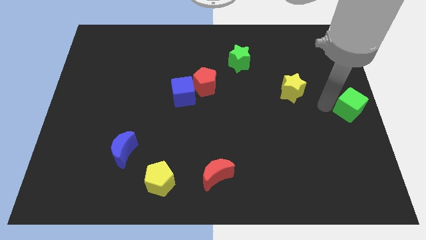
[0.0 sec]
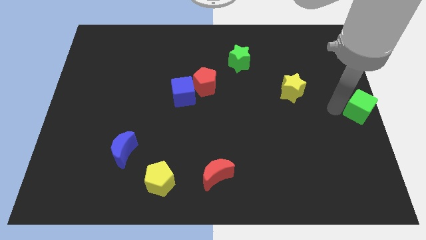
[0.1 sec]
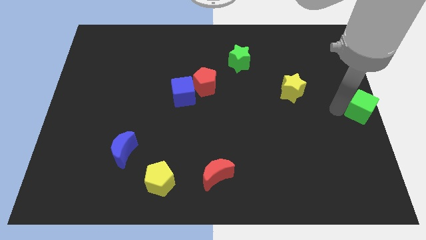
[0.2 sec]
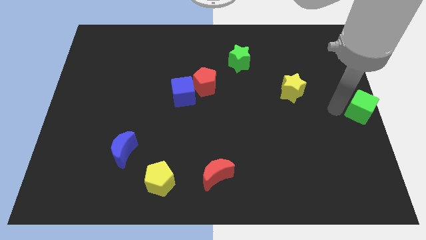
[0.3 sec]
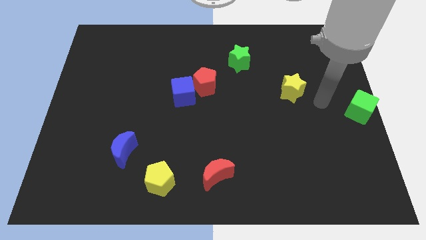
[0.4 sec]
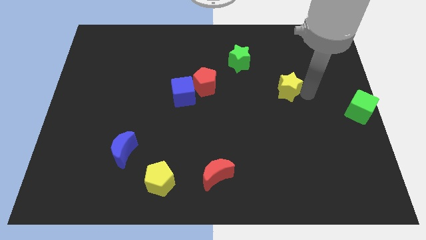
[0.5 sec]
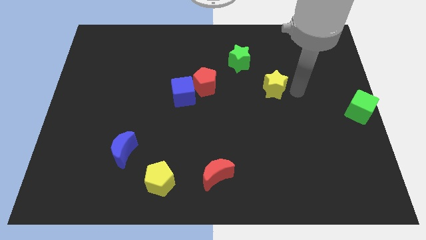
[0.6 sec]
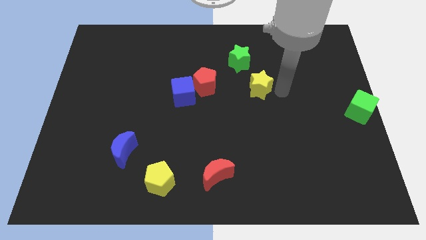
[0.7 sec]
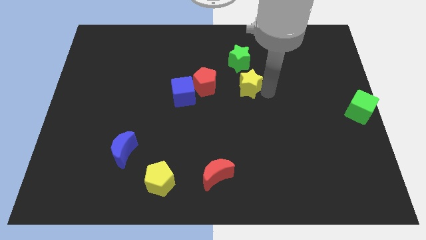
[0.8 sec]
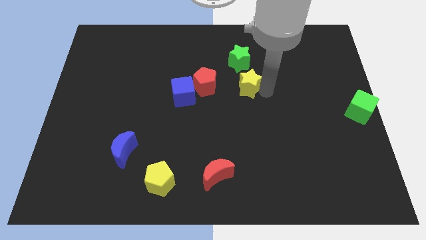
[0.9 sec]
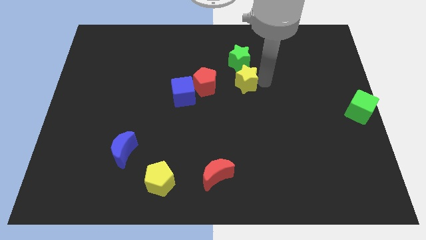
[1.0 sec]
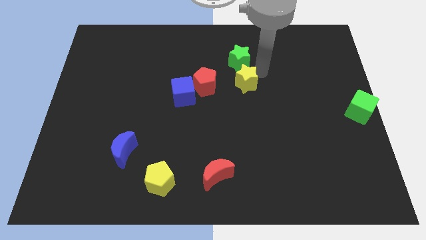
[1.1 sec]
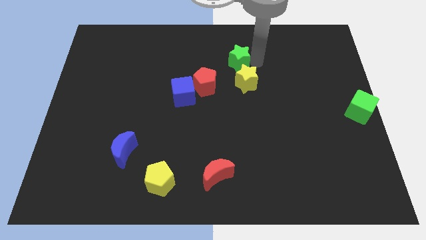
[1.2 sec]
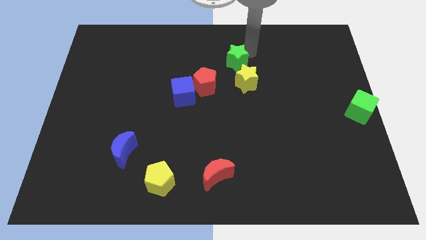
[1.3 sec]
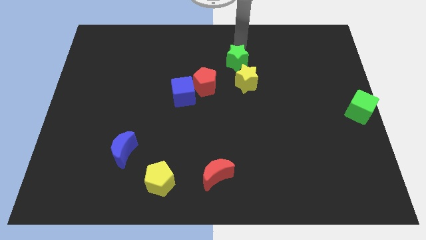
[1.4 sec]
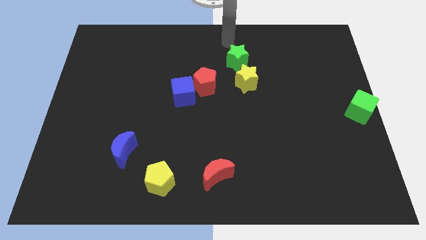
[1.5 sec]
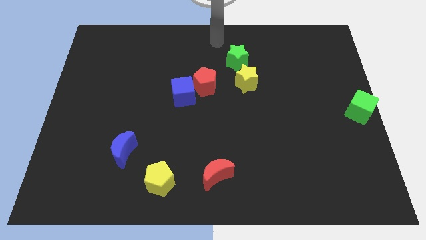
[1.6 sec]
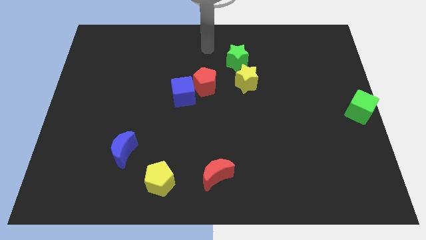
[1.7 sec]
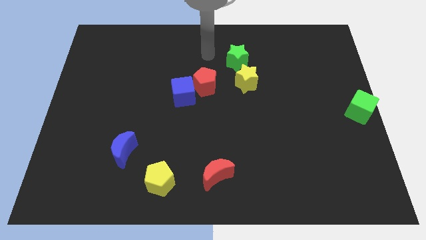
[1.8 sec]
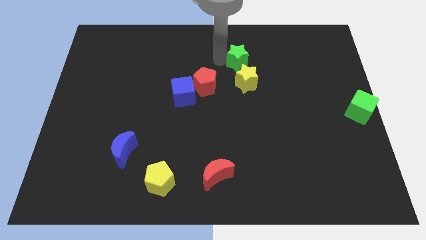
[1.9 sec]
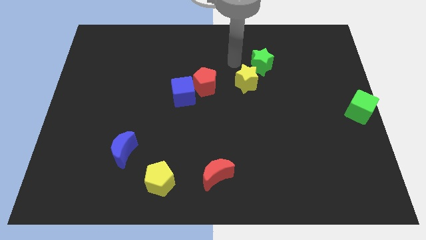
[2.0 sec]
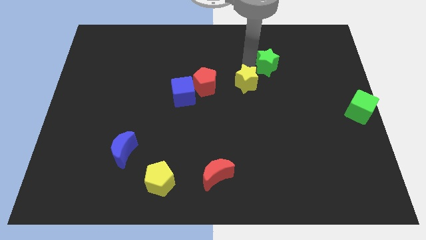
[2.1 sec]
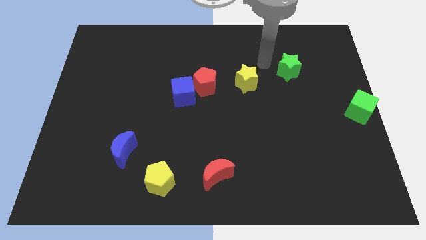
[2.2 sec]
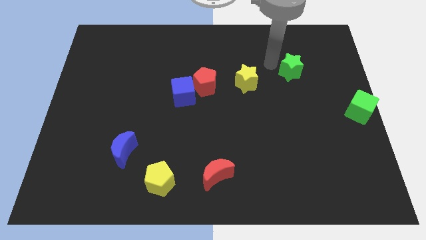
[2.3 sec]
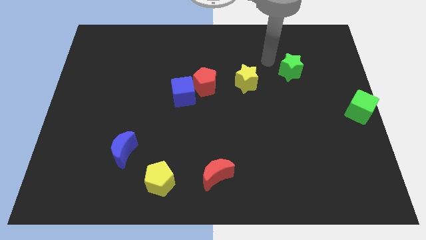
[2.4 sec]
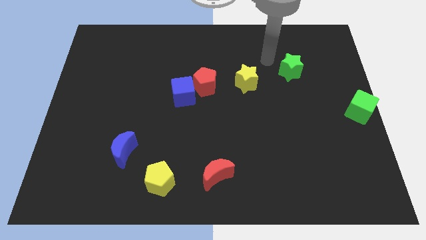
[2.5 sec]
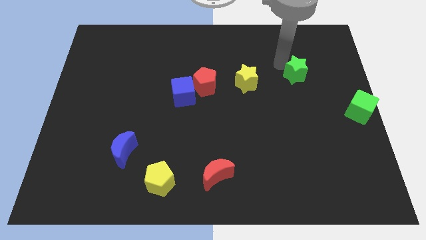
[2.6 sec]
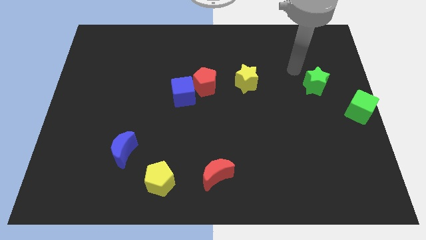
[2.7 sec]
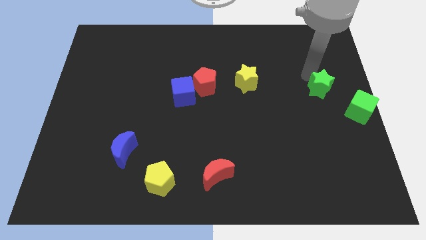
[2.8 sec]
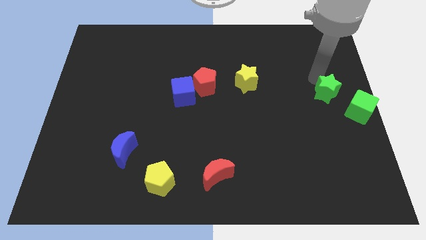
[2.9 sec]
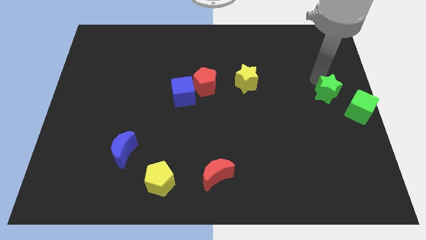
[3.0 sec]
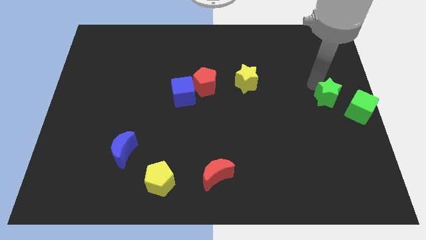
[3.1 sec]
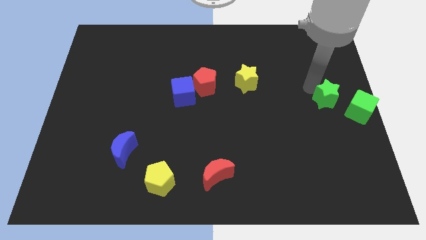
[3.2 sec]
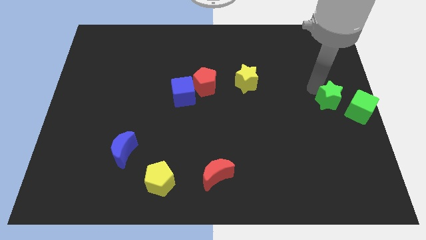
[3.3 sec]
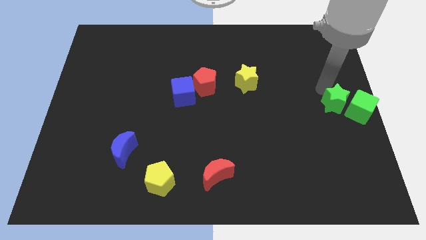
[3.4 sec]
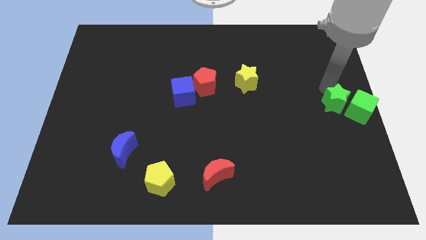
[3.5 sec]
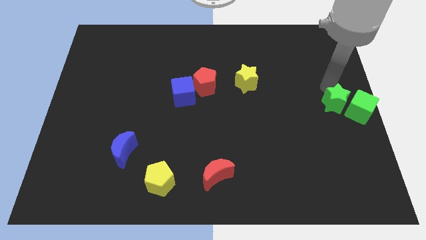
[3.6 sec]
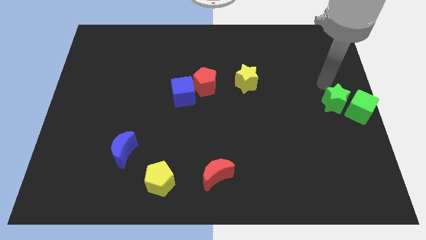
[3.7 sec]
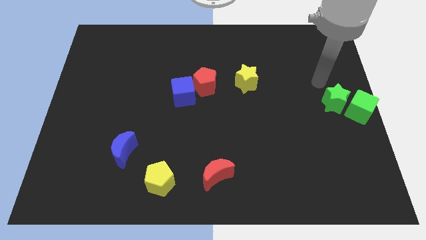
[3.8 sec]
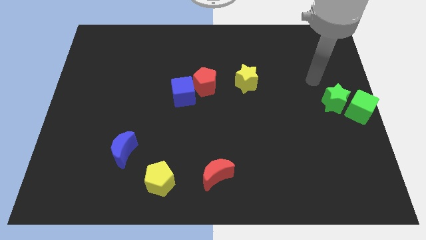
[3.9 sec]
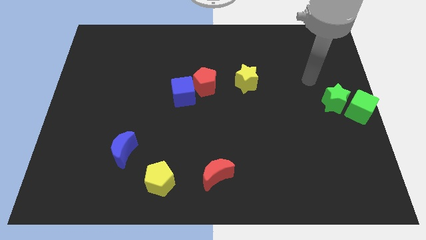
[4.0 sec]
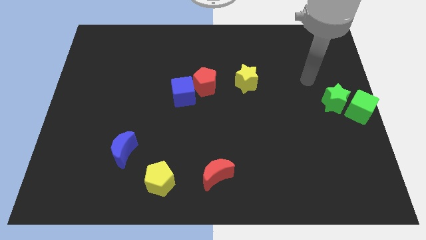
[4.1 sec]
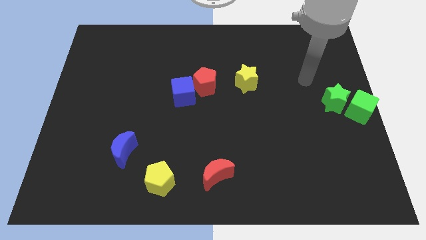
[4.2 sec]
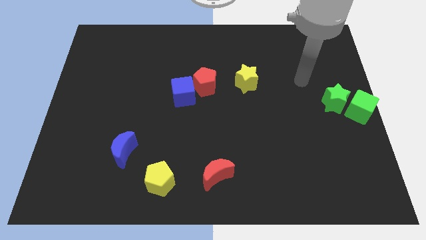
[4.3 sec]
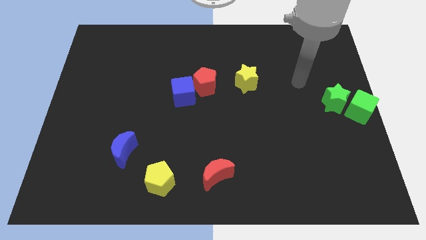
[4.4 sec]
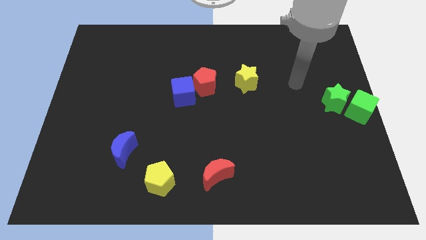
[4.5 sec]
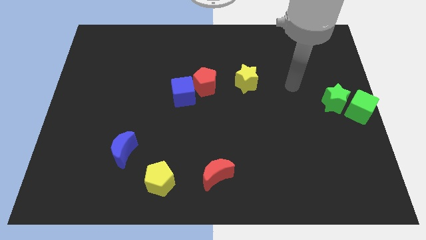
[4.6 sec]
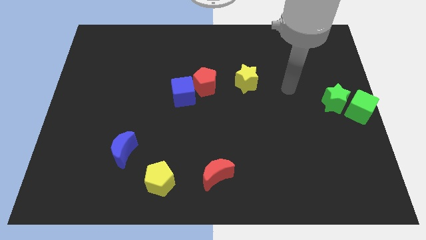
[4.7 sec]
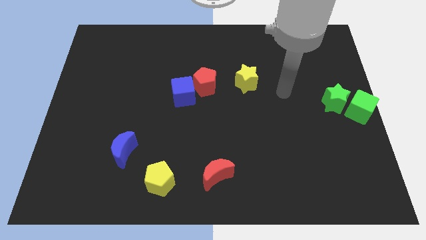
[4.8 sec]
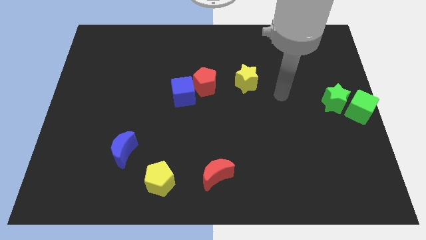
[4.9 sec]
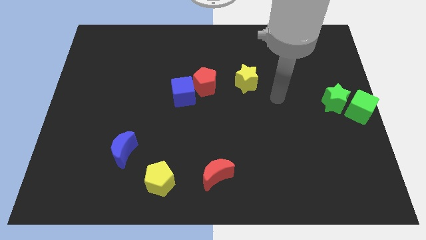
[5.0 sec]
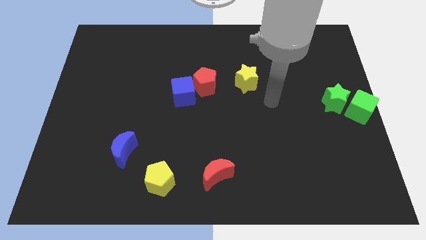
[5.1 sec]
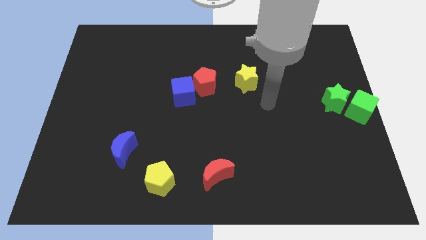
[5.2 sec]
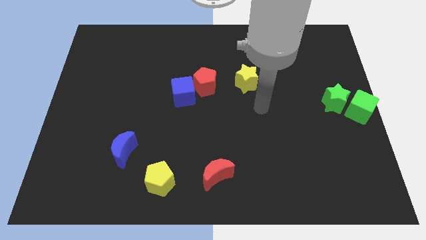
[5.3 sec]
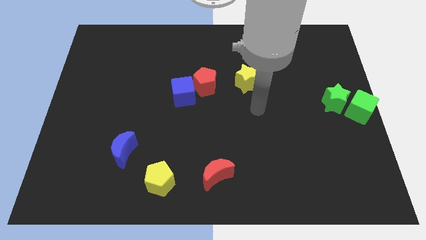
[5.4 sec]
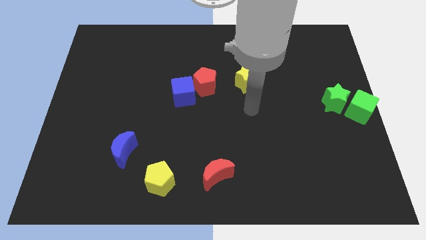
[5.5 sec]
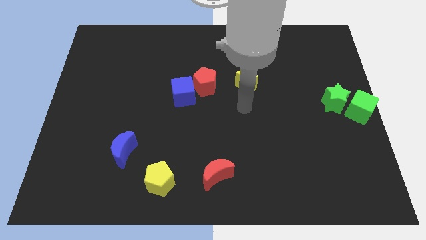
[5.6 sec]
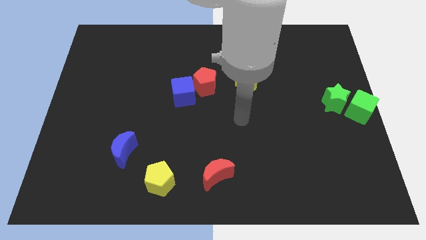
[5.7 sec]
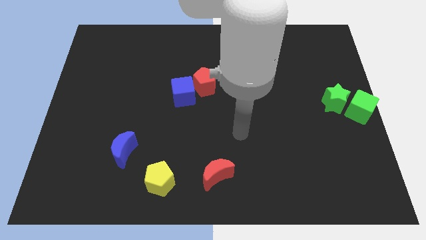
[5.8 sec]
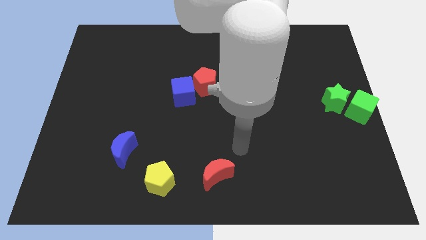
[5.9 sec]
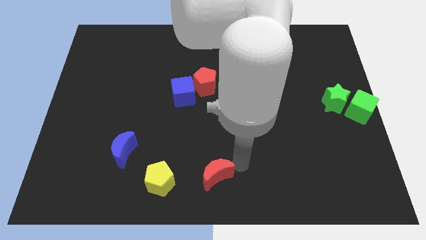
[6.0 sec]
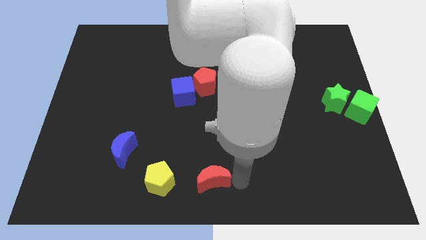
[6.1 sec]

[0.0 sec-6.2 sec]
move the green star to left side of the green cube

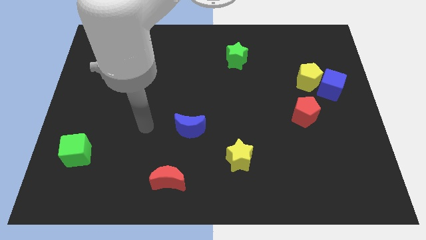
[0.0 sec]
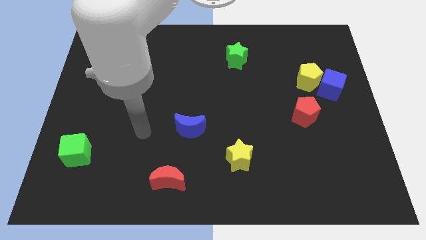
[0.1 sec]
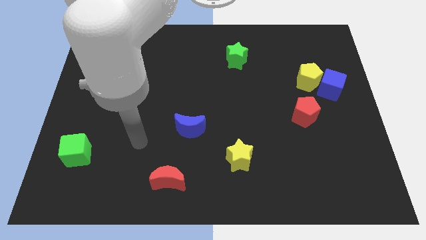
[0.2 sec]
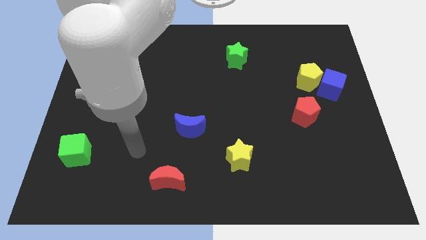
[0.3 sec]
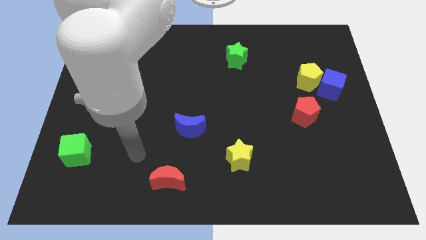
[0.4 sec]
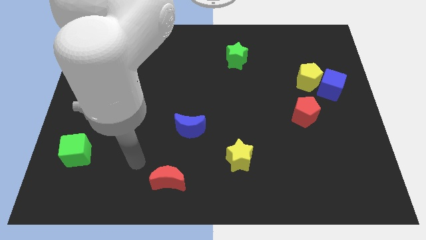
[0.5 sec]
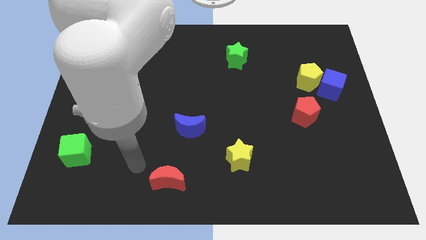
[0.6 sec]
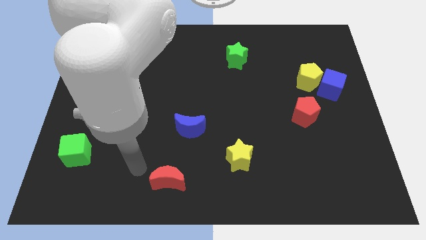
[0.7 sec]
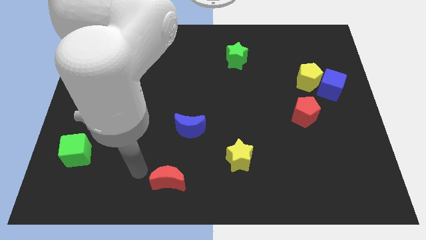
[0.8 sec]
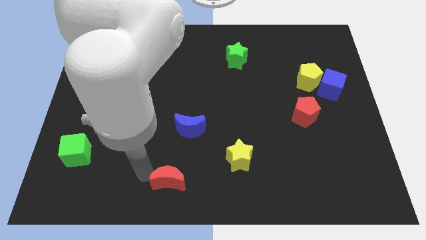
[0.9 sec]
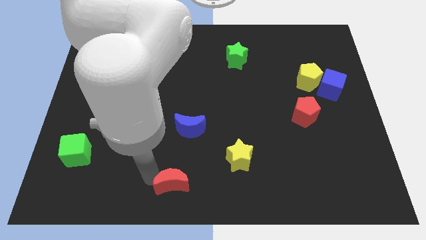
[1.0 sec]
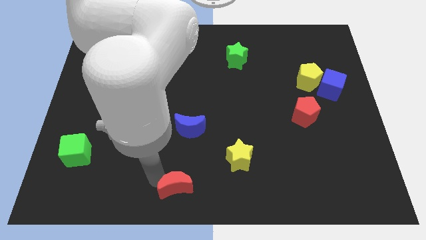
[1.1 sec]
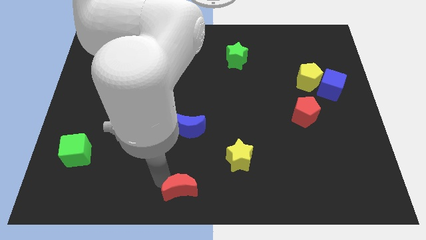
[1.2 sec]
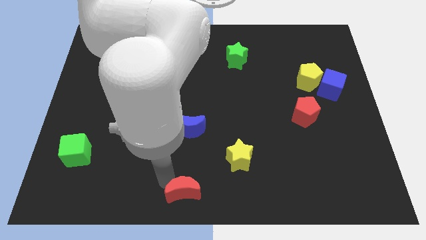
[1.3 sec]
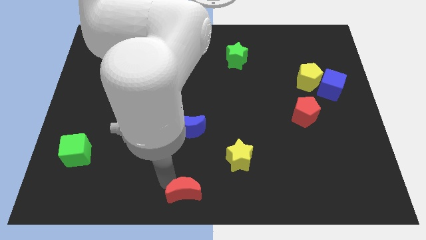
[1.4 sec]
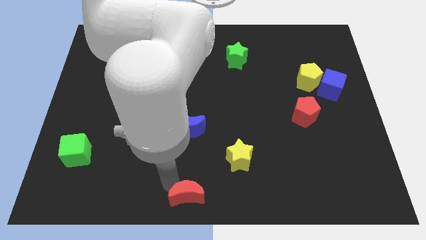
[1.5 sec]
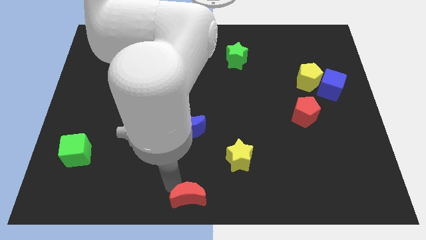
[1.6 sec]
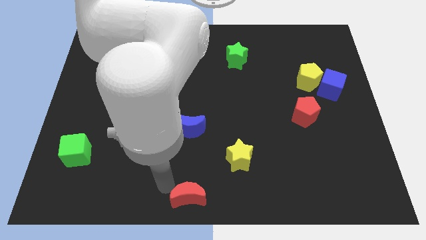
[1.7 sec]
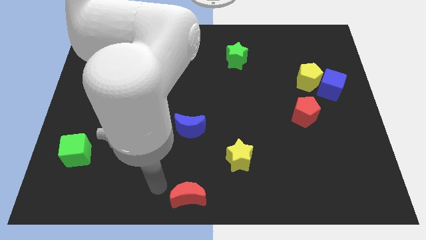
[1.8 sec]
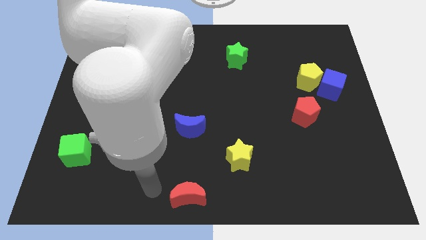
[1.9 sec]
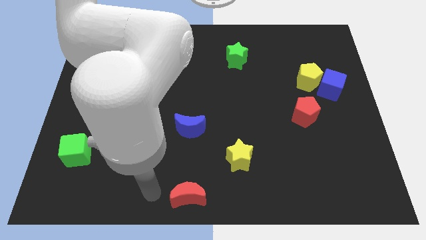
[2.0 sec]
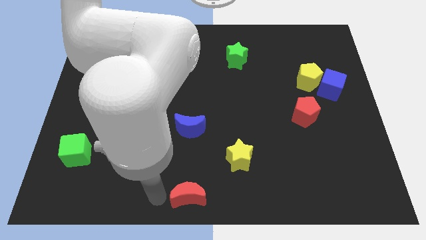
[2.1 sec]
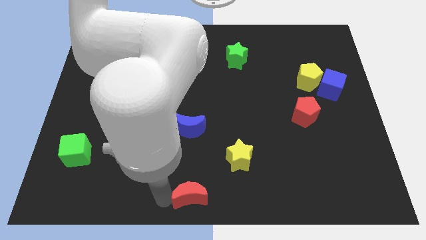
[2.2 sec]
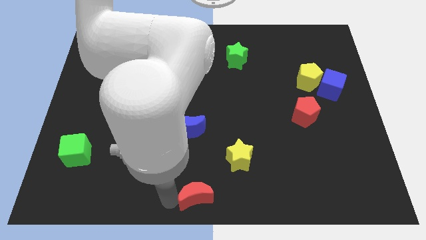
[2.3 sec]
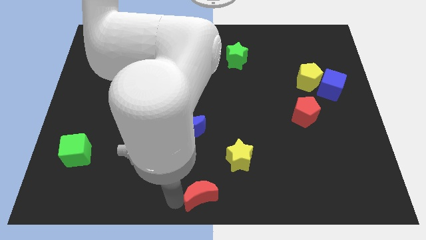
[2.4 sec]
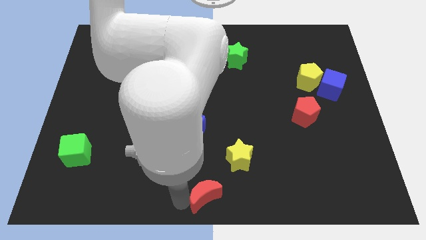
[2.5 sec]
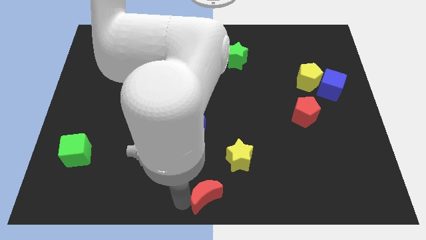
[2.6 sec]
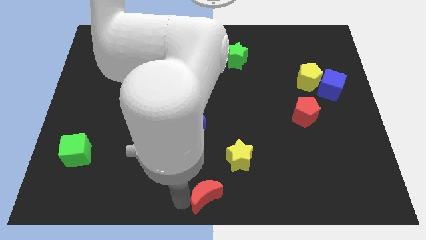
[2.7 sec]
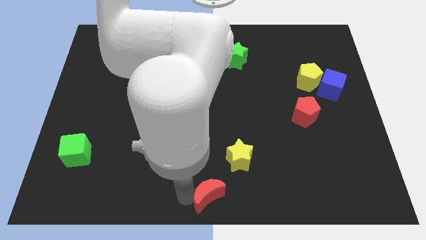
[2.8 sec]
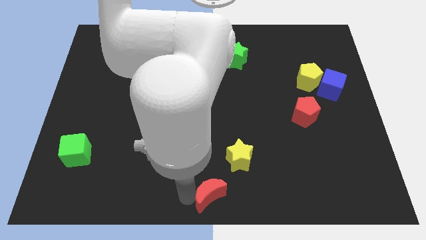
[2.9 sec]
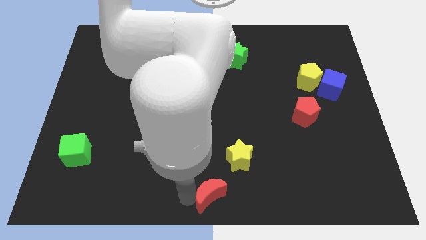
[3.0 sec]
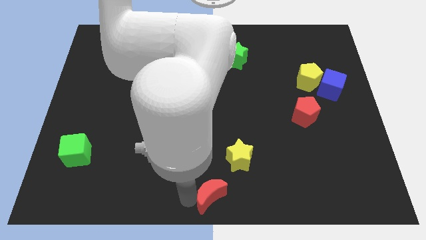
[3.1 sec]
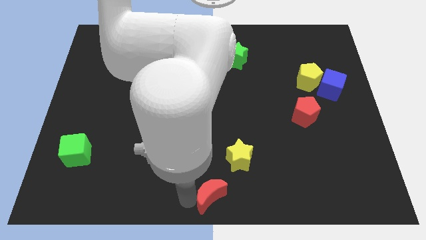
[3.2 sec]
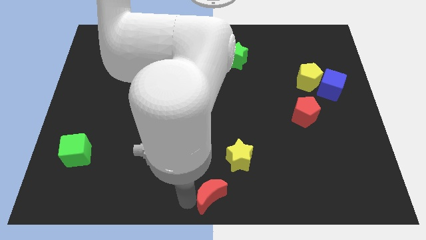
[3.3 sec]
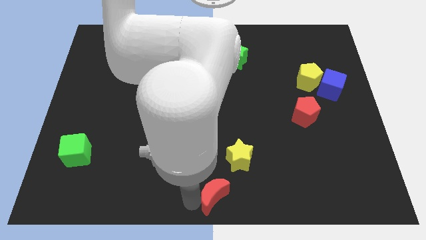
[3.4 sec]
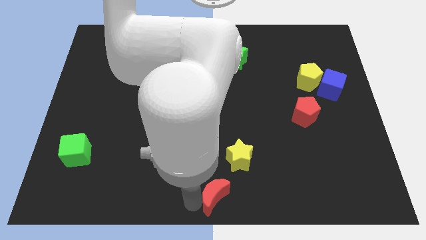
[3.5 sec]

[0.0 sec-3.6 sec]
place red moon to the bottom center of the board
